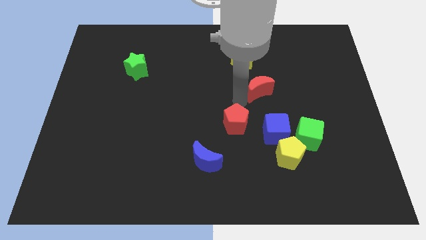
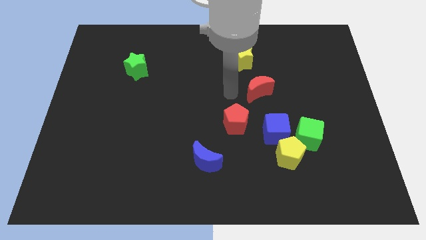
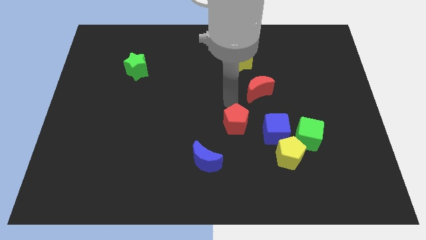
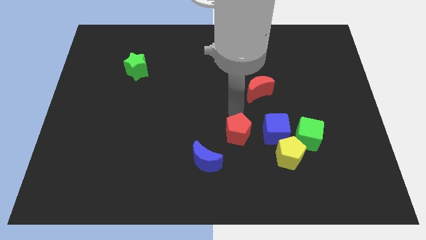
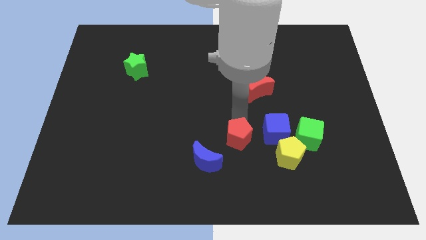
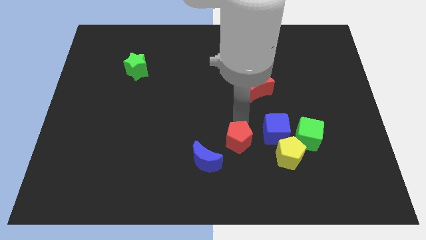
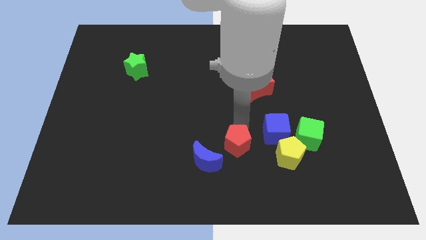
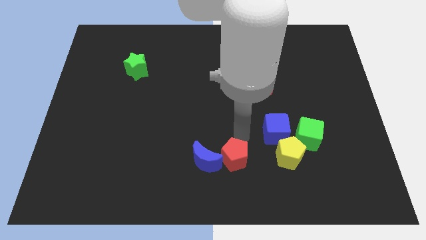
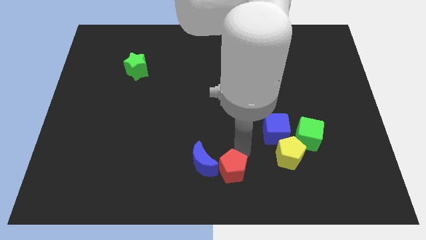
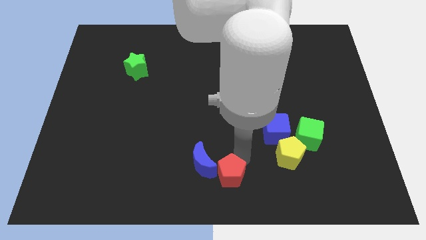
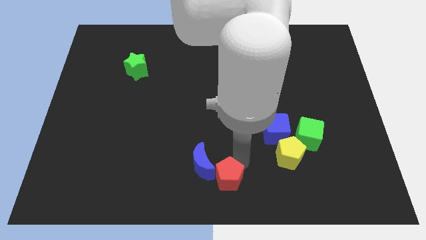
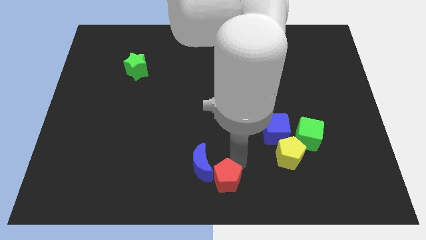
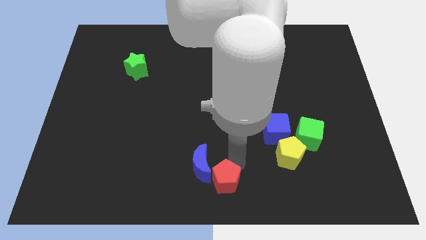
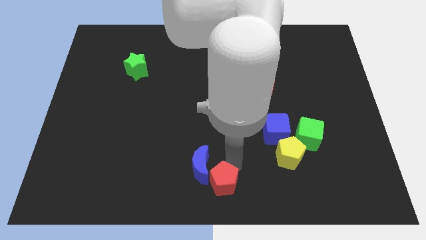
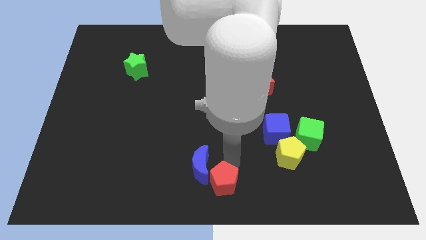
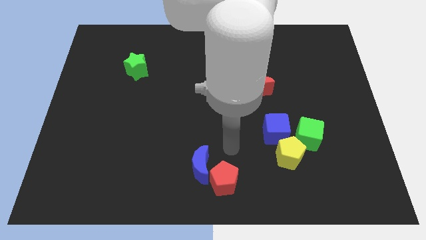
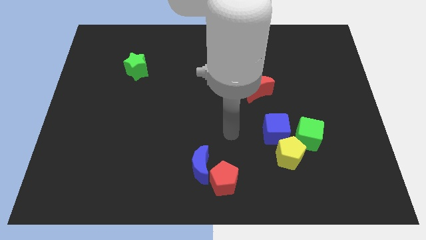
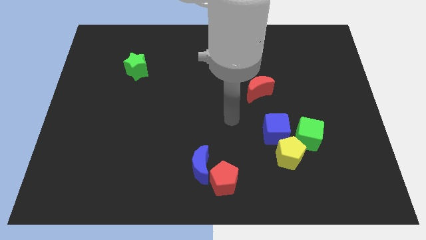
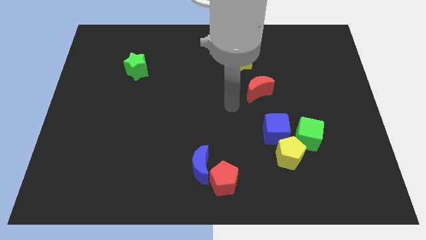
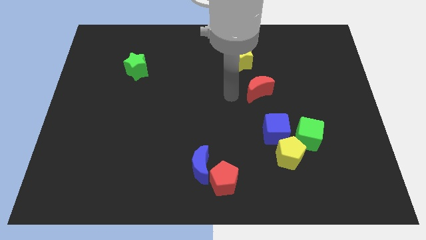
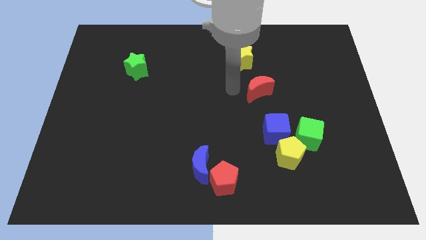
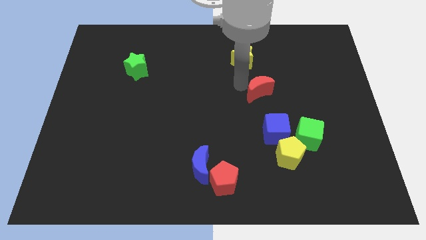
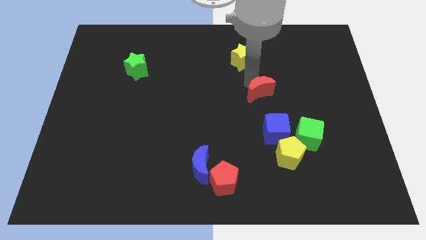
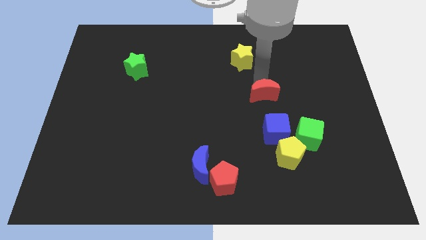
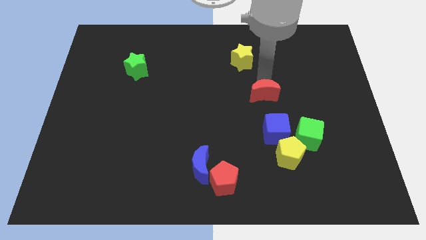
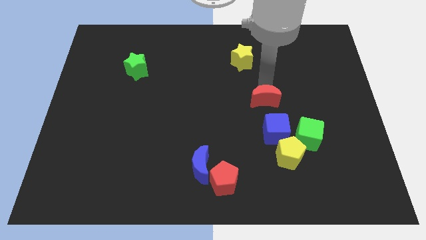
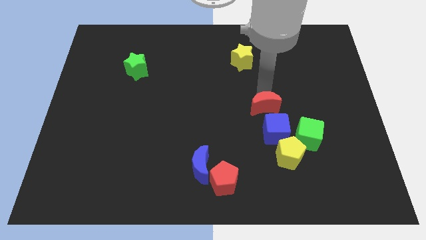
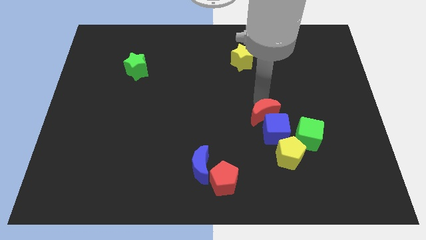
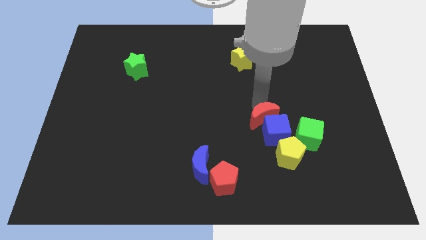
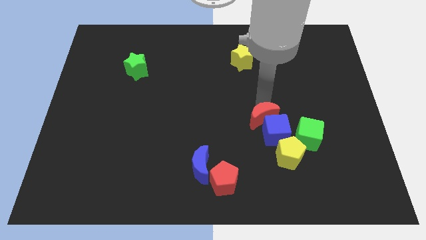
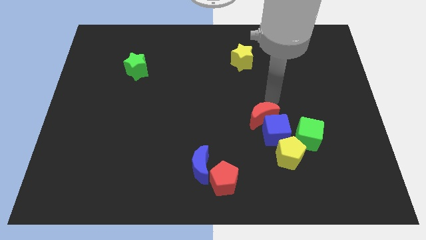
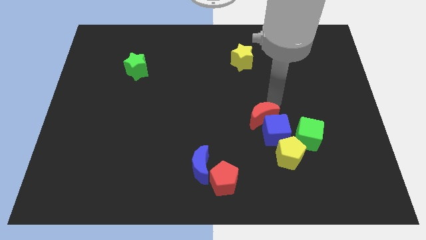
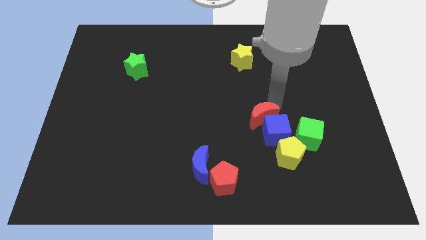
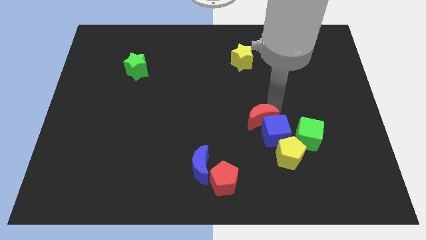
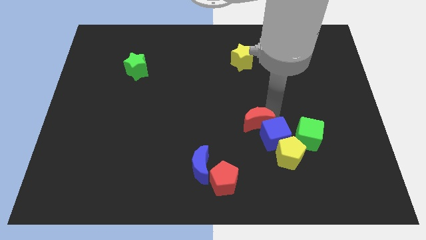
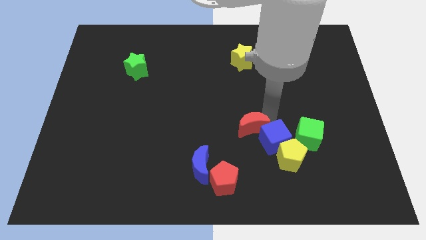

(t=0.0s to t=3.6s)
push the red moon into the blue cube

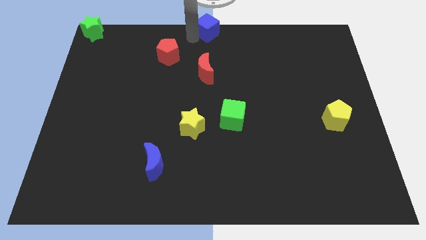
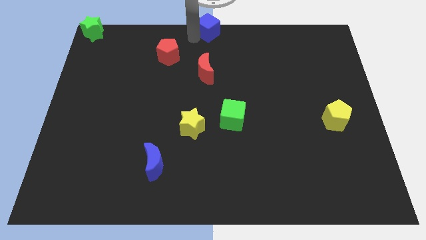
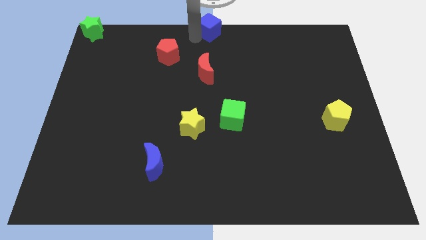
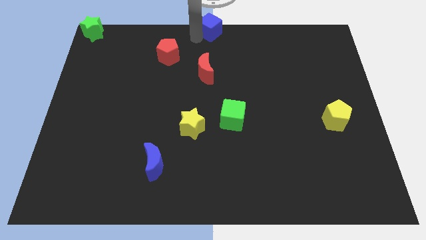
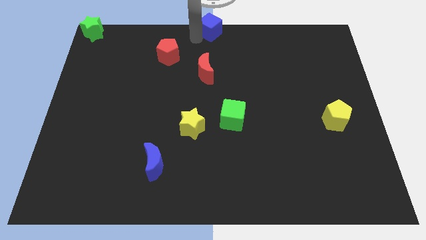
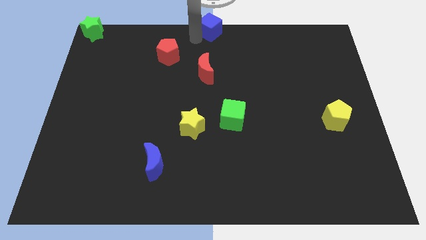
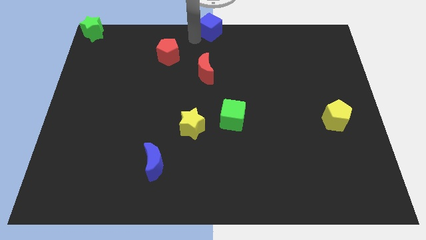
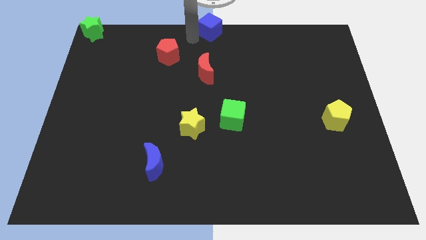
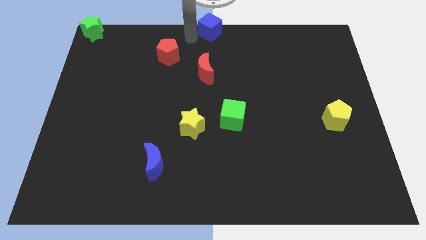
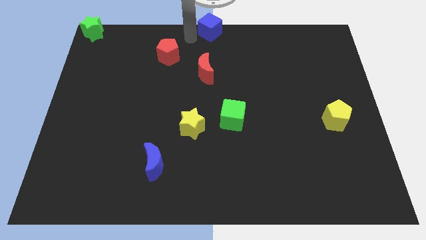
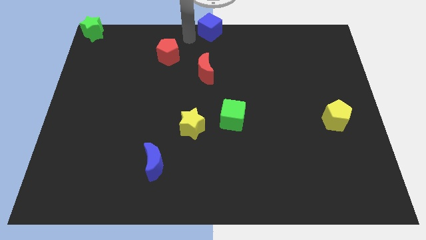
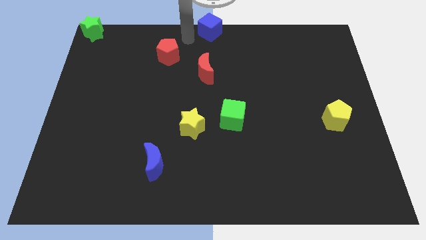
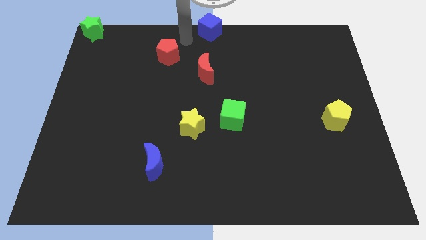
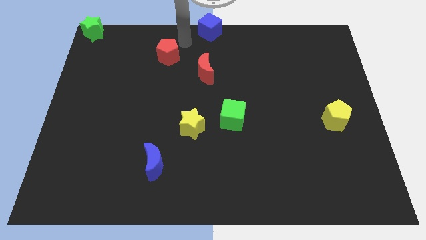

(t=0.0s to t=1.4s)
place your arm in between red pentagon and blue cube

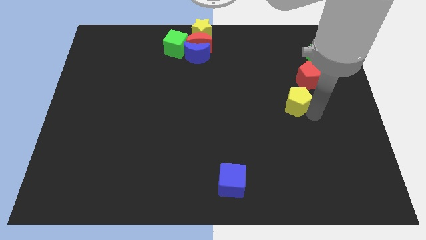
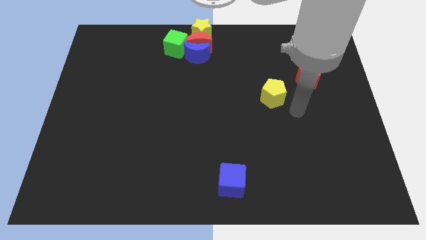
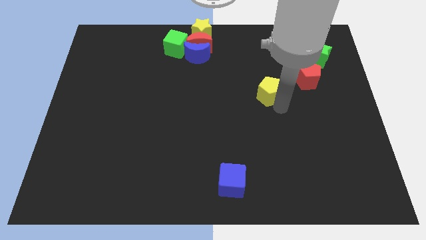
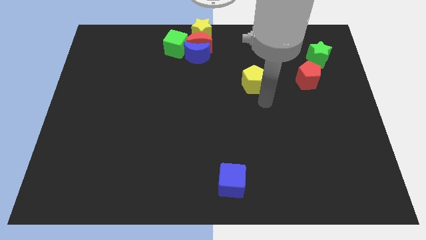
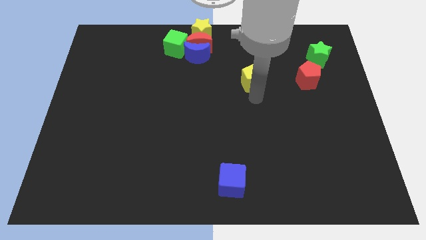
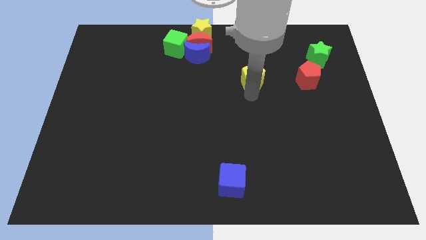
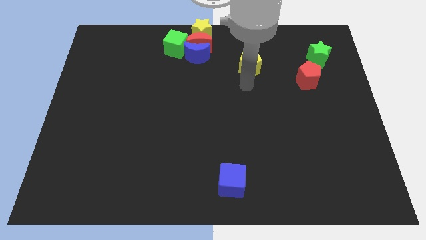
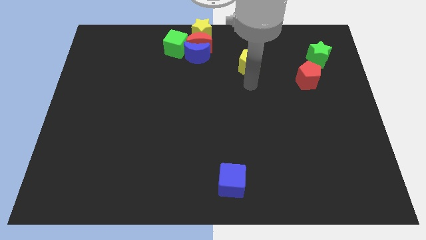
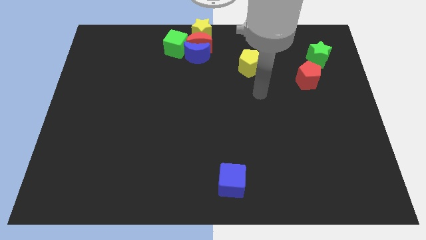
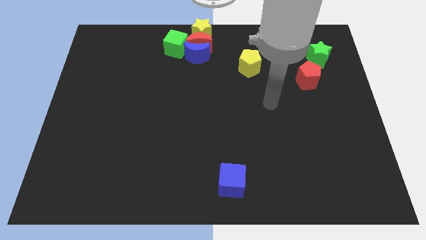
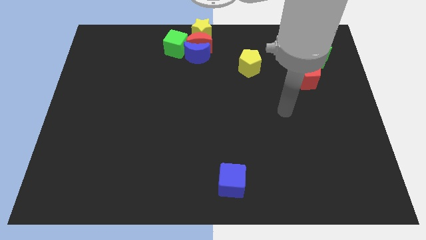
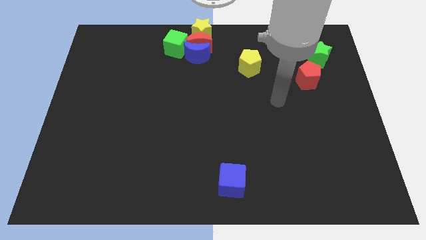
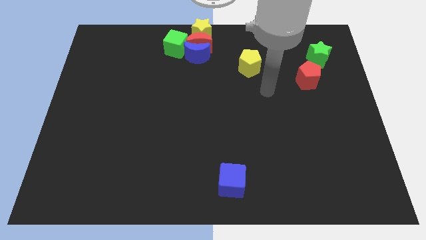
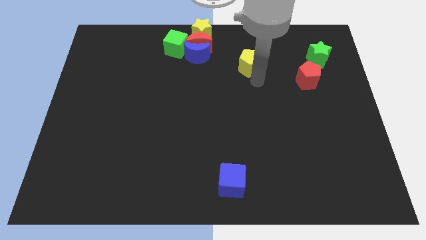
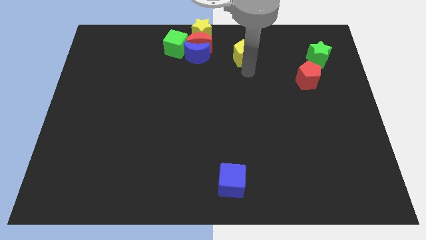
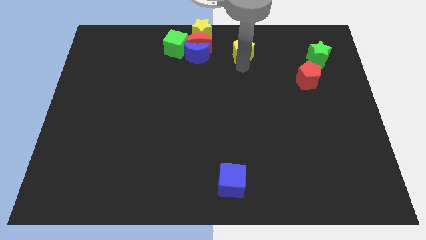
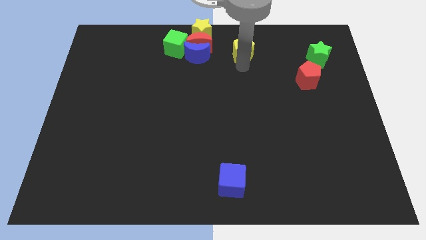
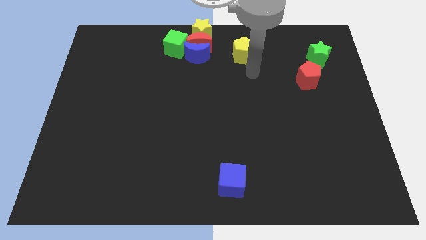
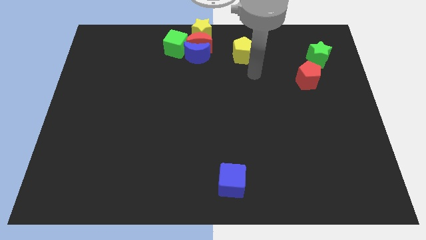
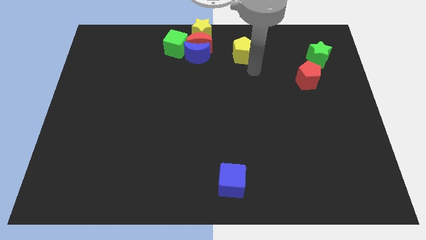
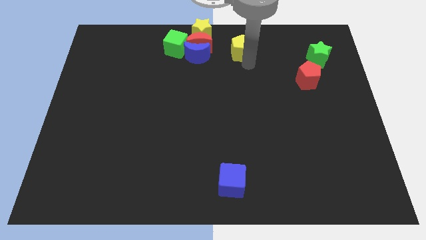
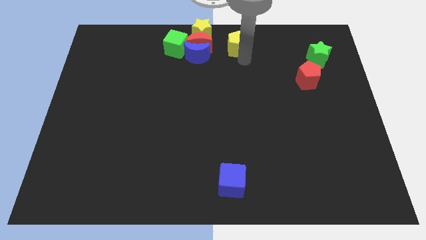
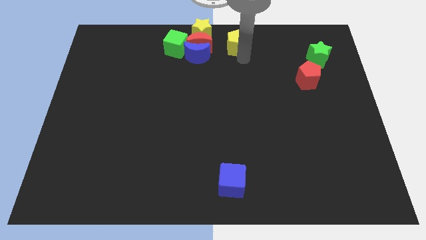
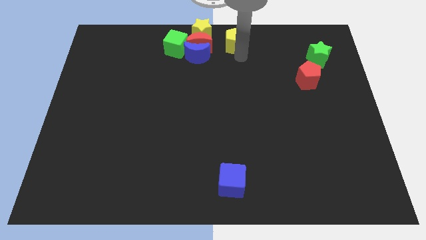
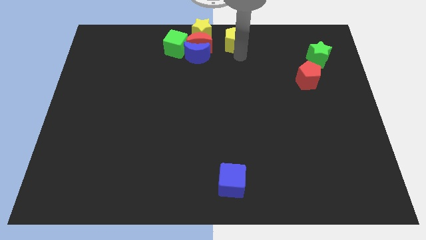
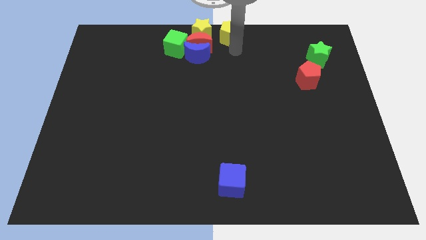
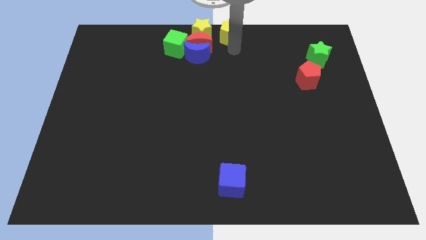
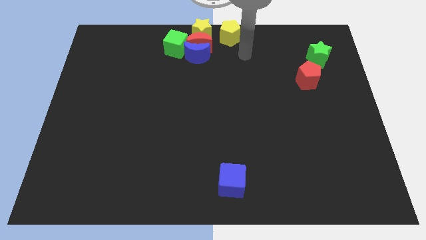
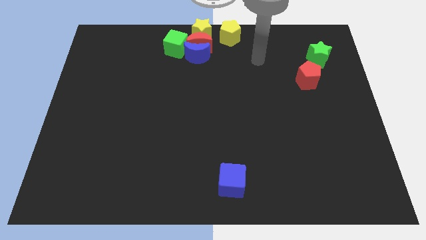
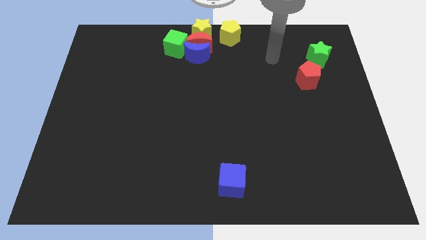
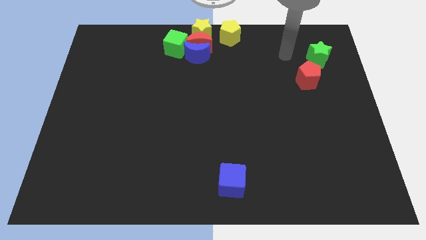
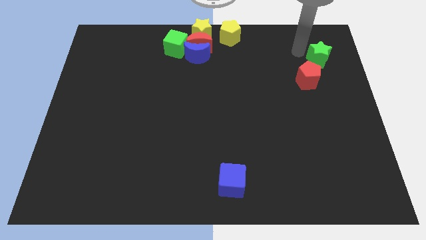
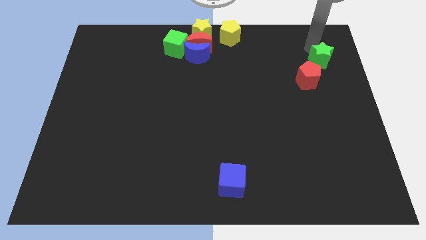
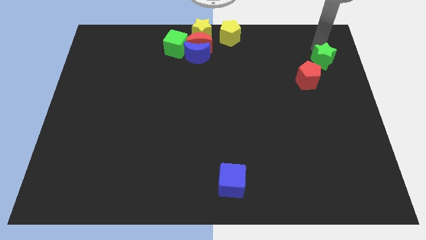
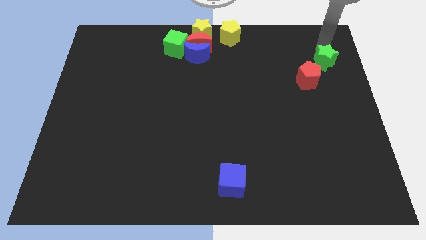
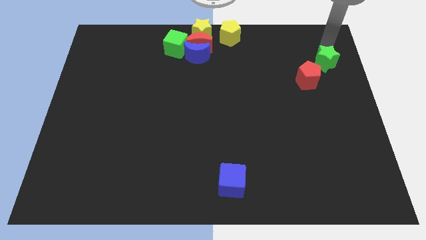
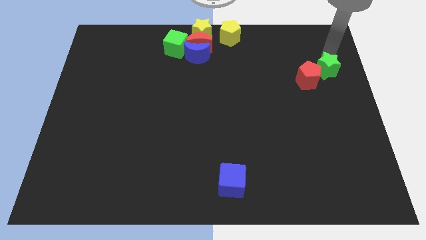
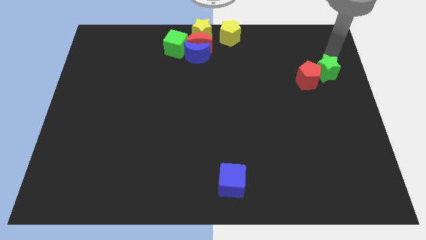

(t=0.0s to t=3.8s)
push the yellow pentagon towards the top center of the board
